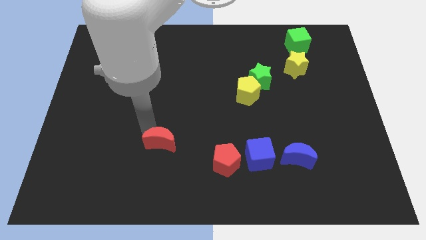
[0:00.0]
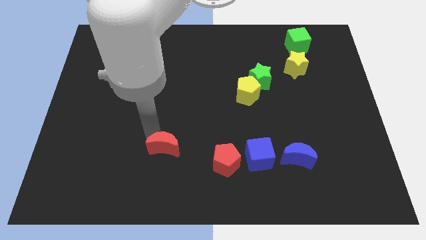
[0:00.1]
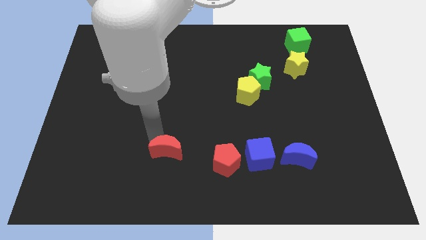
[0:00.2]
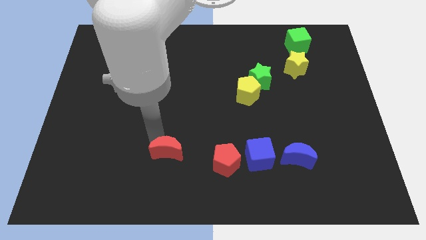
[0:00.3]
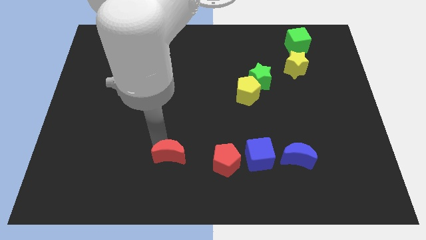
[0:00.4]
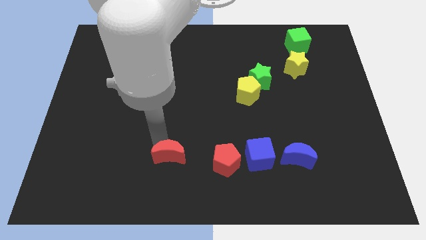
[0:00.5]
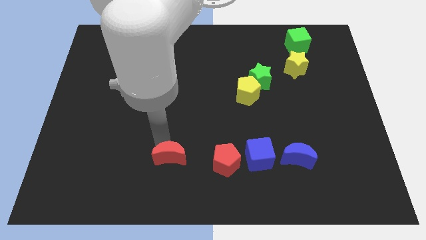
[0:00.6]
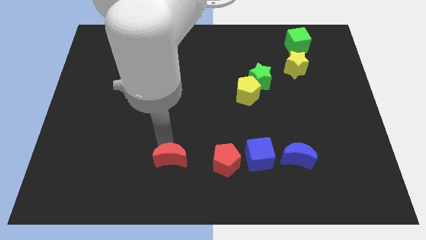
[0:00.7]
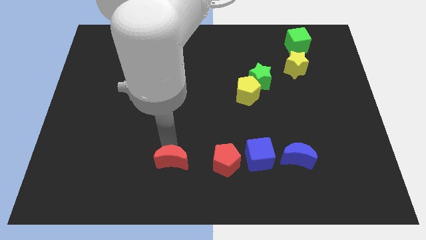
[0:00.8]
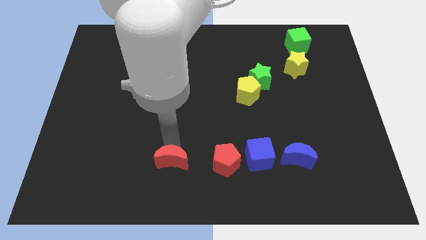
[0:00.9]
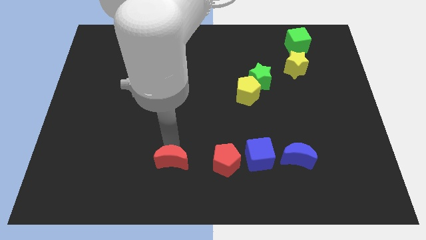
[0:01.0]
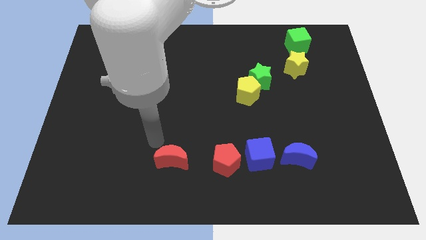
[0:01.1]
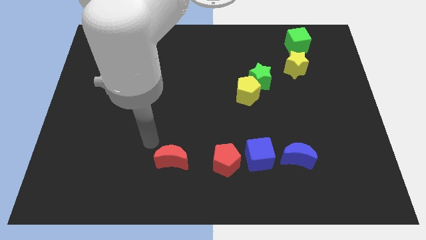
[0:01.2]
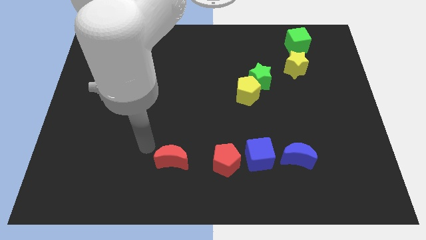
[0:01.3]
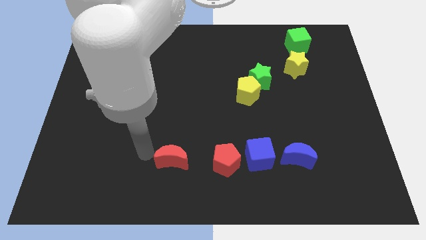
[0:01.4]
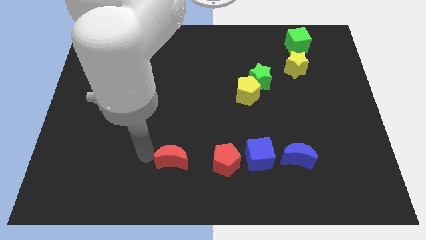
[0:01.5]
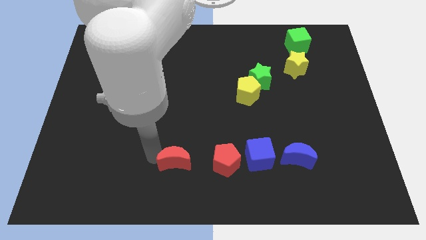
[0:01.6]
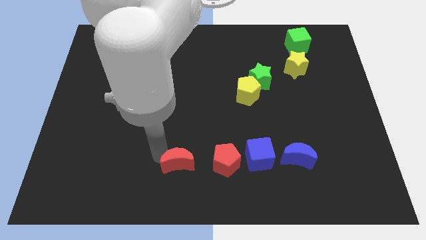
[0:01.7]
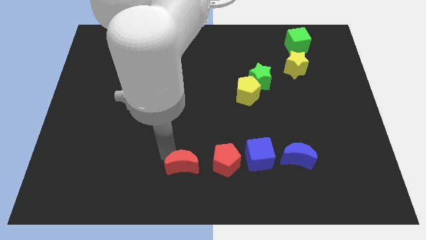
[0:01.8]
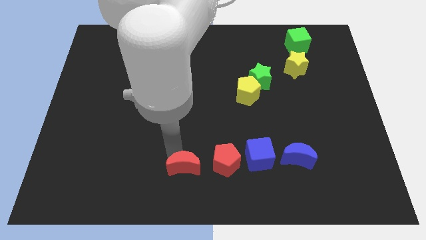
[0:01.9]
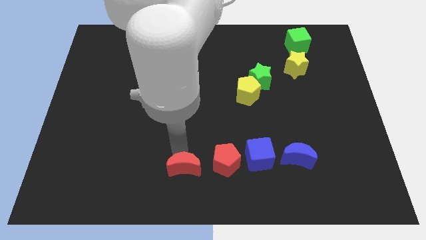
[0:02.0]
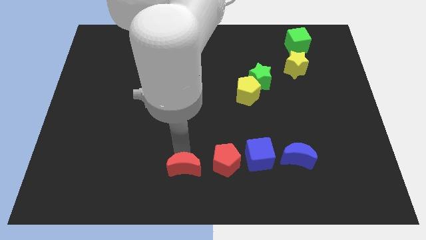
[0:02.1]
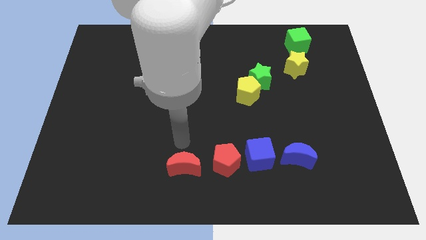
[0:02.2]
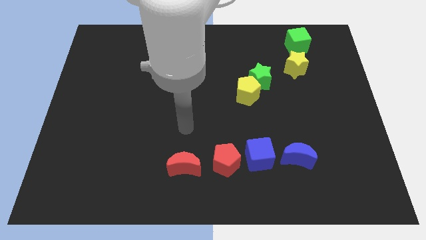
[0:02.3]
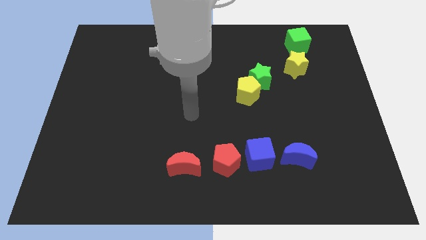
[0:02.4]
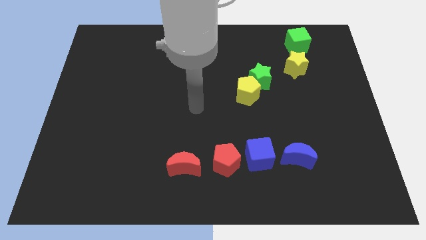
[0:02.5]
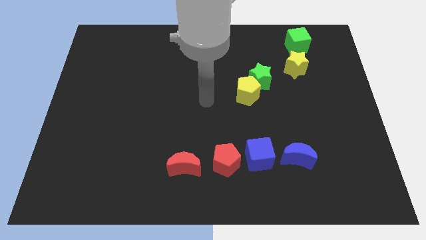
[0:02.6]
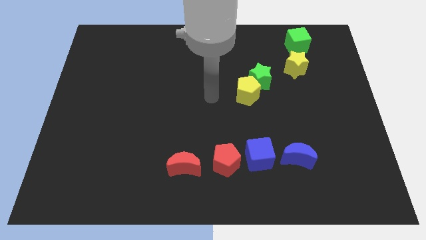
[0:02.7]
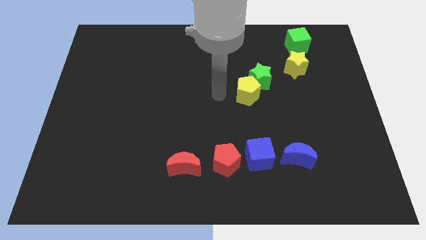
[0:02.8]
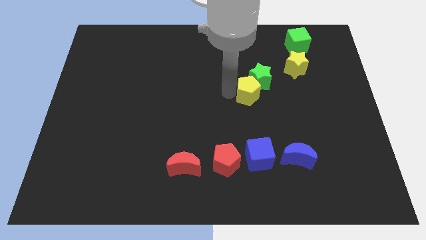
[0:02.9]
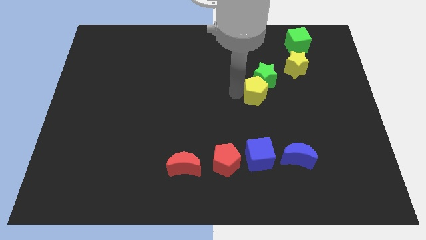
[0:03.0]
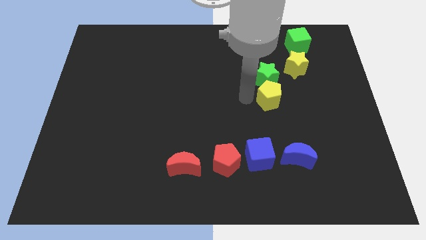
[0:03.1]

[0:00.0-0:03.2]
slightly push the yellow pentagon to the right side

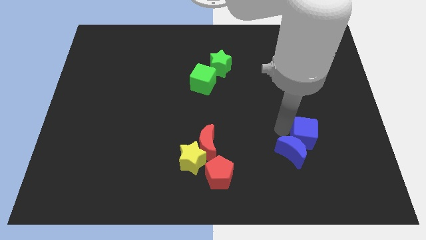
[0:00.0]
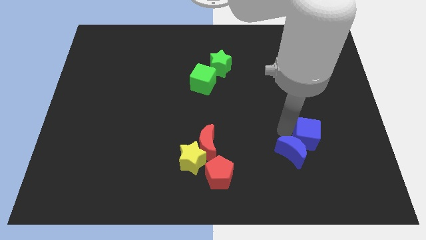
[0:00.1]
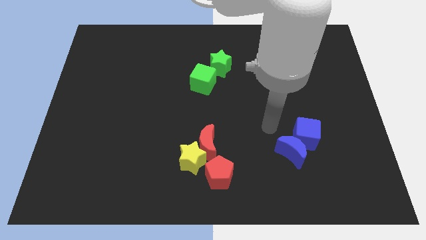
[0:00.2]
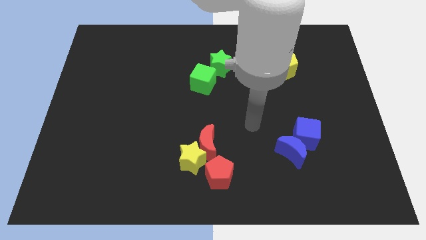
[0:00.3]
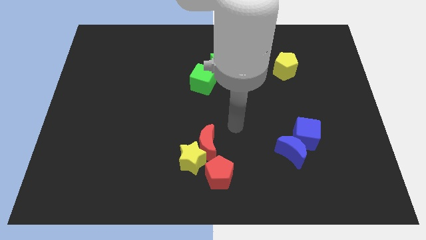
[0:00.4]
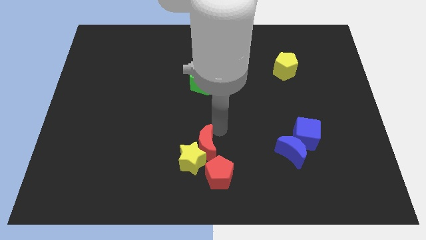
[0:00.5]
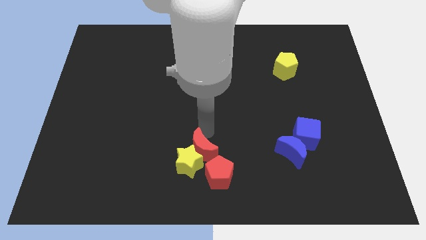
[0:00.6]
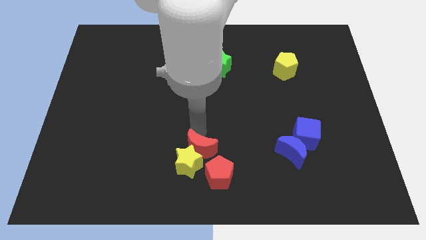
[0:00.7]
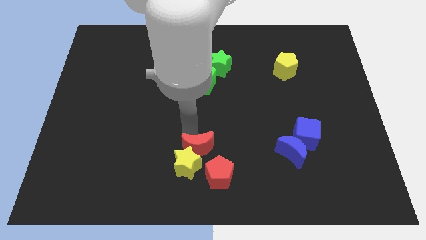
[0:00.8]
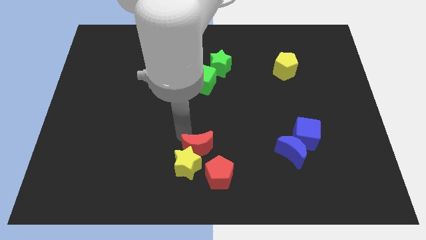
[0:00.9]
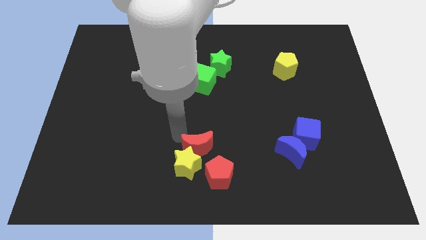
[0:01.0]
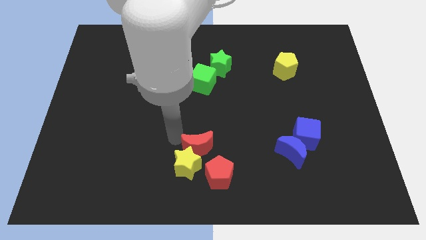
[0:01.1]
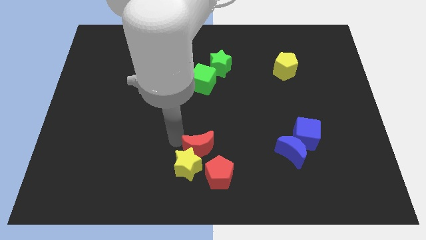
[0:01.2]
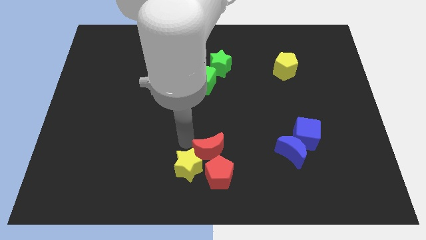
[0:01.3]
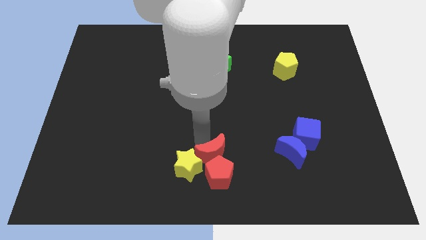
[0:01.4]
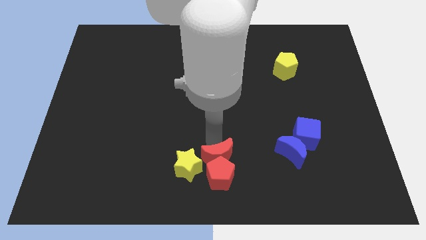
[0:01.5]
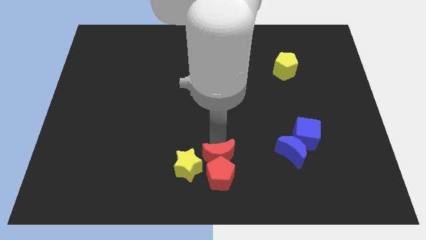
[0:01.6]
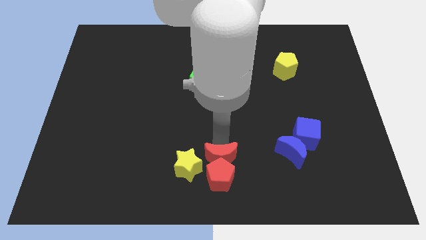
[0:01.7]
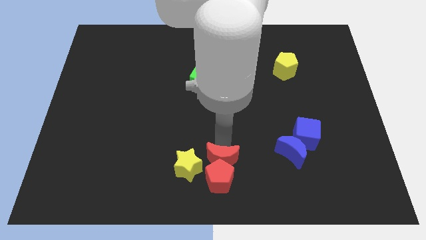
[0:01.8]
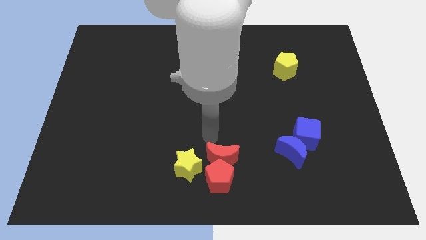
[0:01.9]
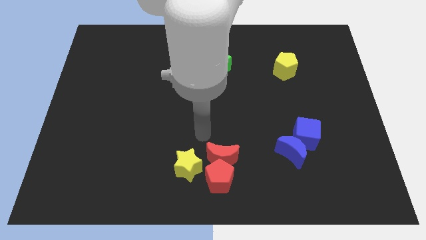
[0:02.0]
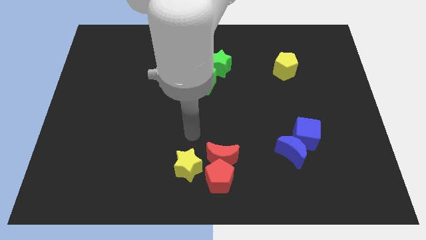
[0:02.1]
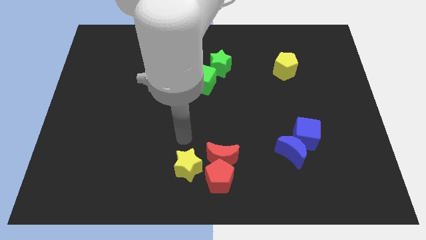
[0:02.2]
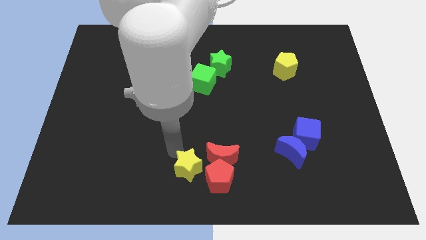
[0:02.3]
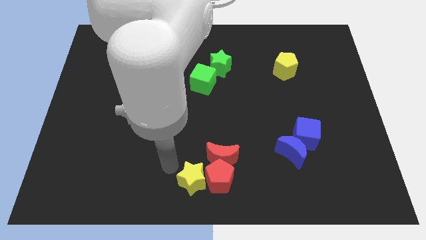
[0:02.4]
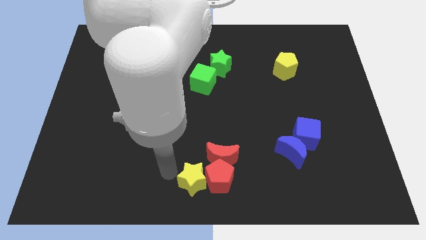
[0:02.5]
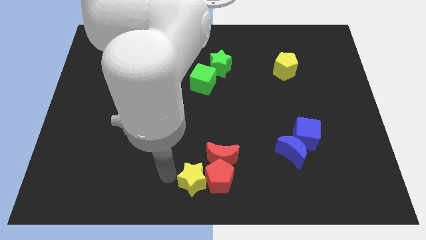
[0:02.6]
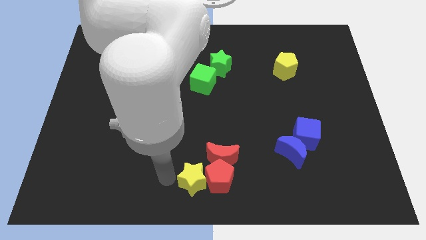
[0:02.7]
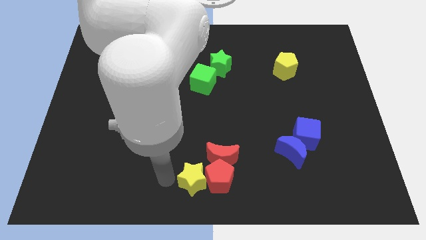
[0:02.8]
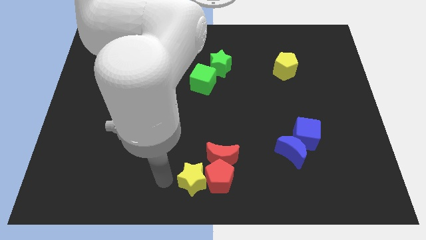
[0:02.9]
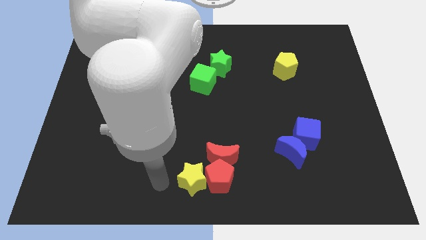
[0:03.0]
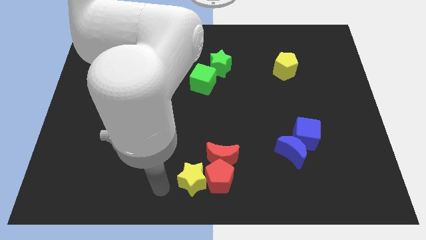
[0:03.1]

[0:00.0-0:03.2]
move the red blocks and yellow star to the bottom center

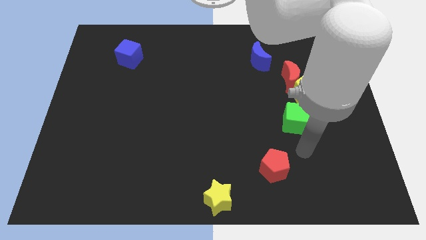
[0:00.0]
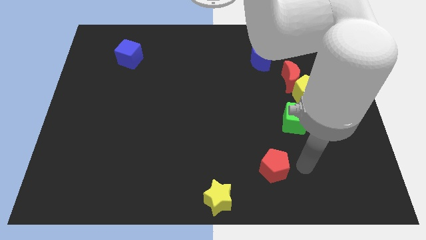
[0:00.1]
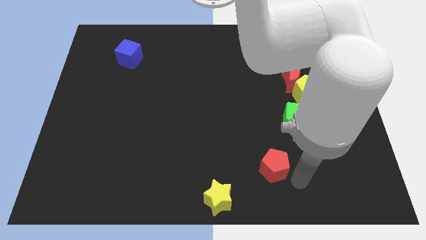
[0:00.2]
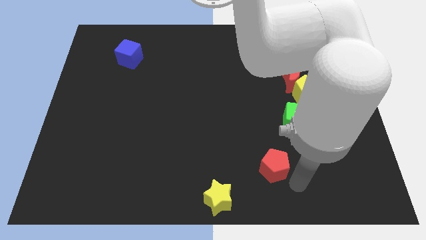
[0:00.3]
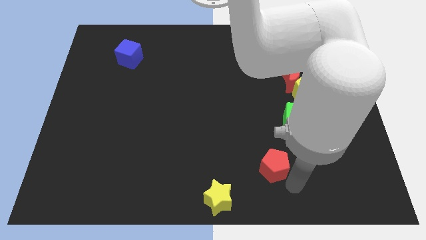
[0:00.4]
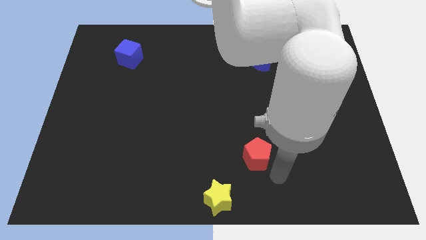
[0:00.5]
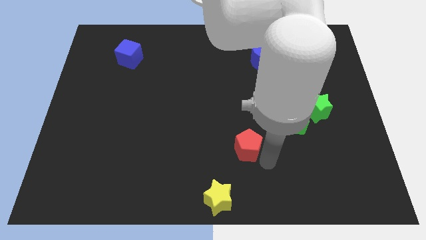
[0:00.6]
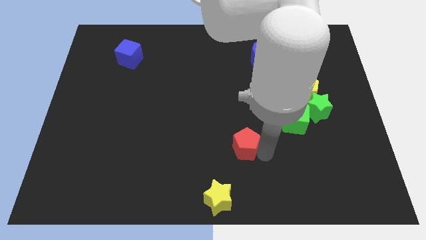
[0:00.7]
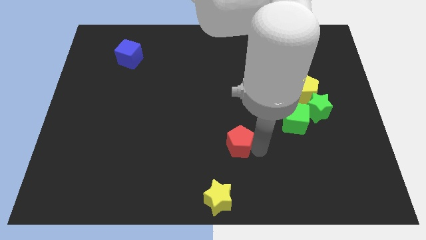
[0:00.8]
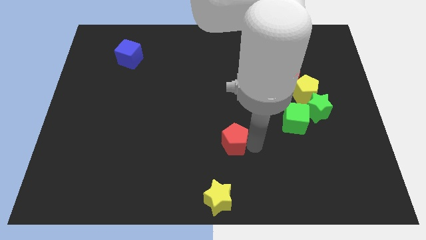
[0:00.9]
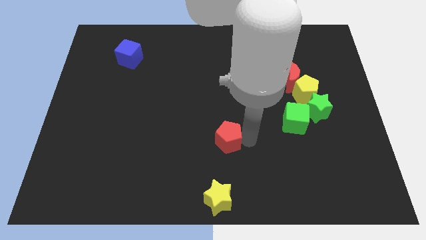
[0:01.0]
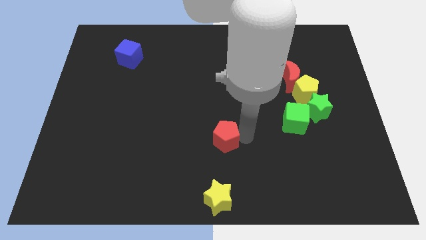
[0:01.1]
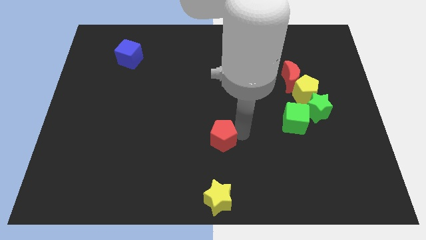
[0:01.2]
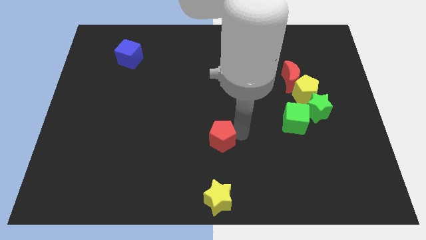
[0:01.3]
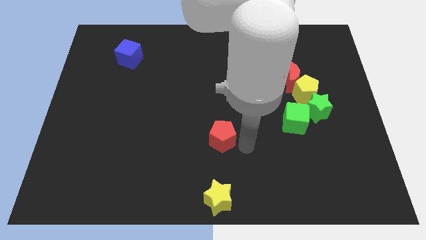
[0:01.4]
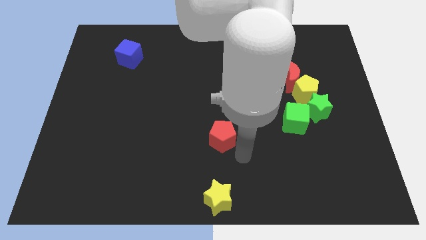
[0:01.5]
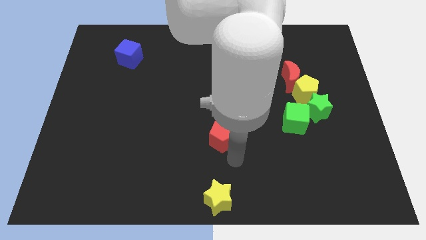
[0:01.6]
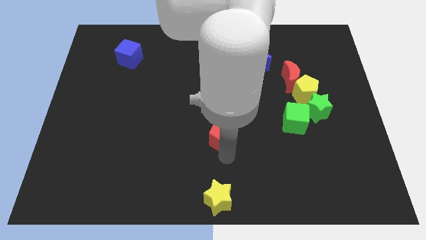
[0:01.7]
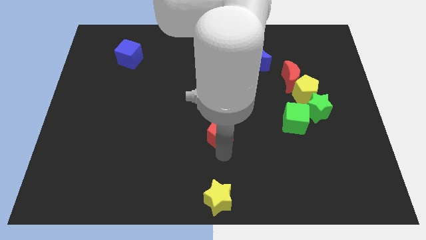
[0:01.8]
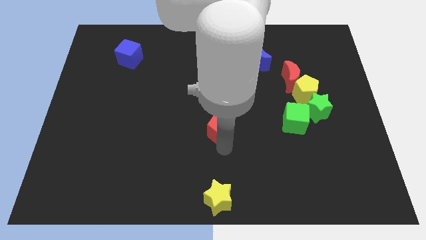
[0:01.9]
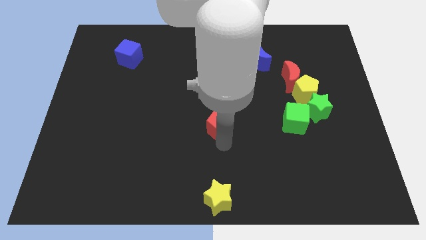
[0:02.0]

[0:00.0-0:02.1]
place the red pentagon vertical to the yellow star

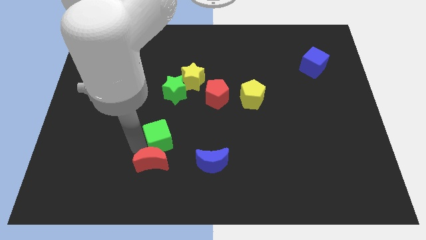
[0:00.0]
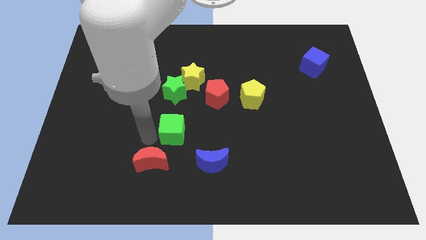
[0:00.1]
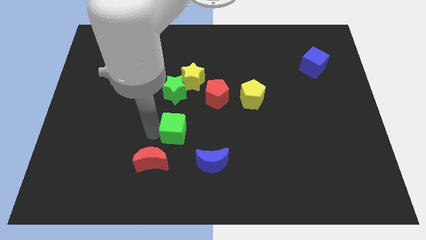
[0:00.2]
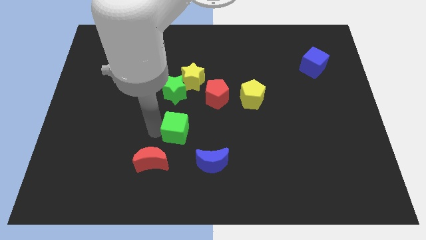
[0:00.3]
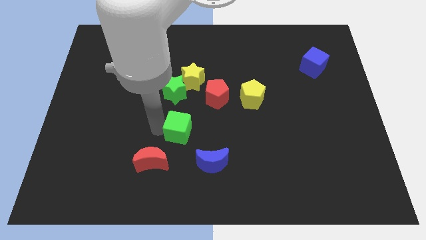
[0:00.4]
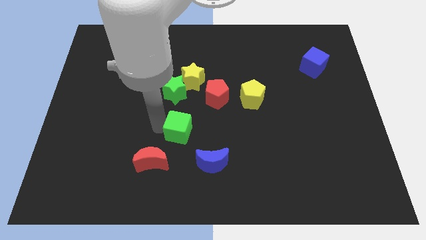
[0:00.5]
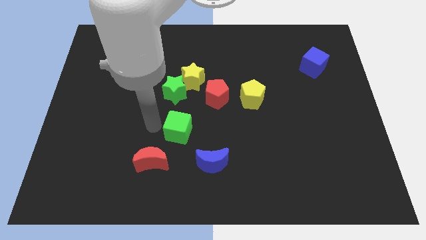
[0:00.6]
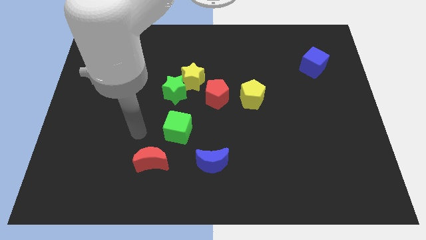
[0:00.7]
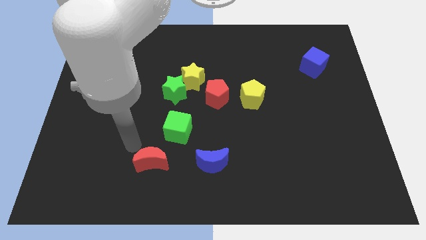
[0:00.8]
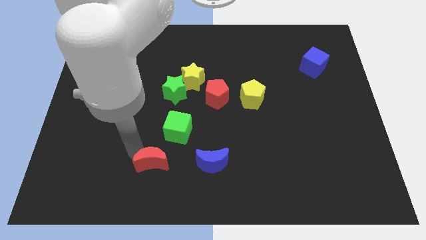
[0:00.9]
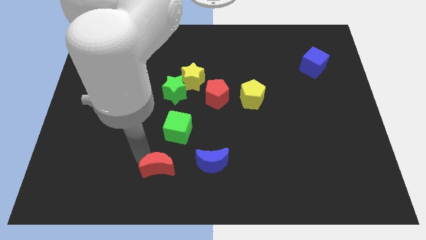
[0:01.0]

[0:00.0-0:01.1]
separate the green cube from the red crescent
